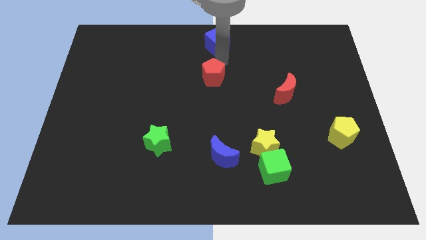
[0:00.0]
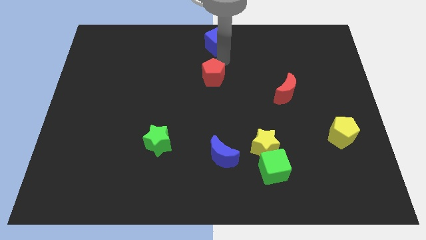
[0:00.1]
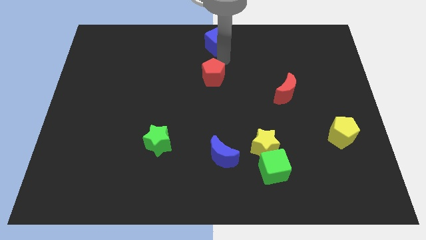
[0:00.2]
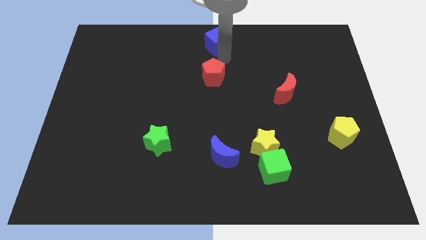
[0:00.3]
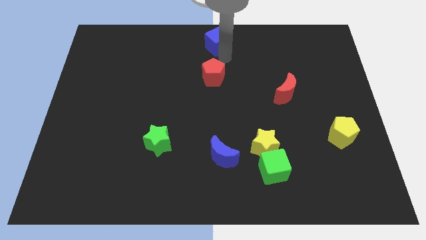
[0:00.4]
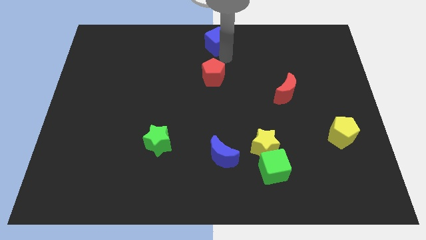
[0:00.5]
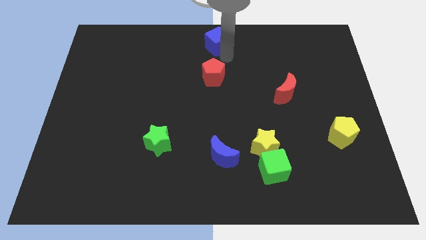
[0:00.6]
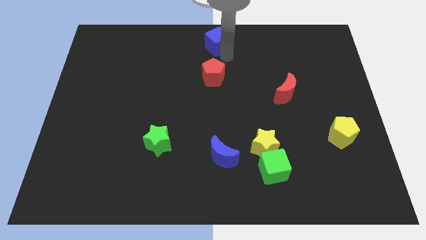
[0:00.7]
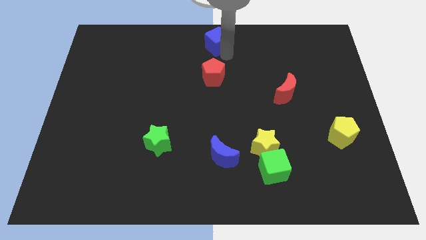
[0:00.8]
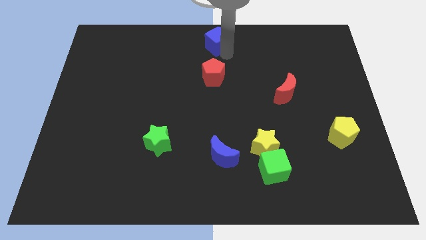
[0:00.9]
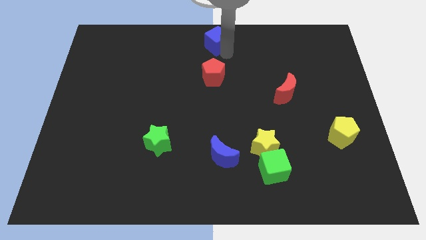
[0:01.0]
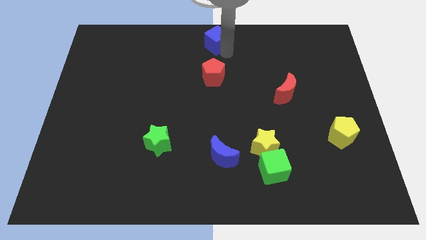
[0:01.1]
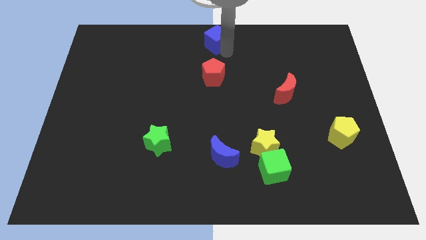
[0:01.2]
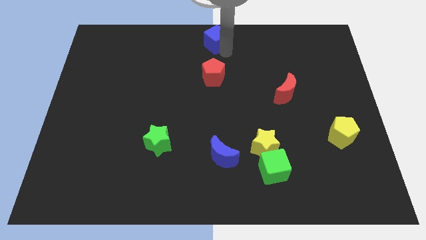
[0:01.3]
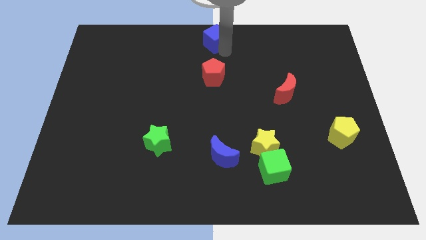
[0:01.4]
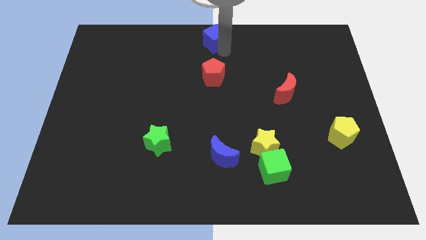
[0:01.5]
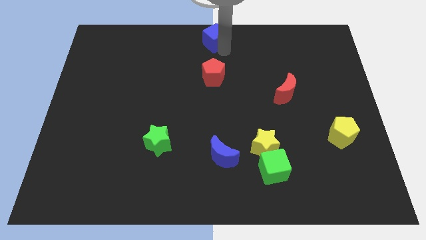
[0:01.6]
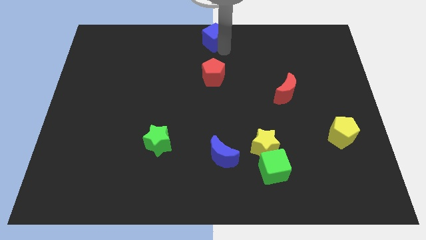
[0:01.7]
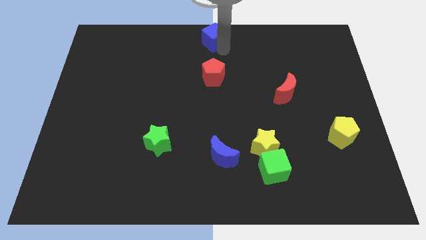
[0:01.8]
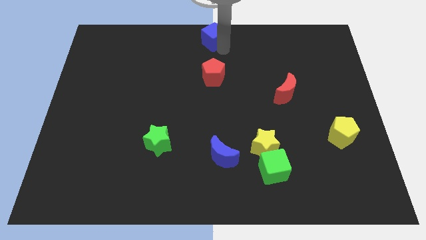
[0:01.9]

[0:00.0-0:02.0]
place the blue cube at the top center of the board

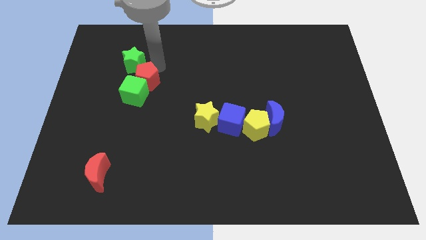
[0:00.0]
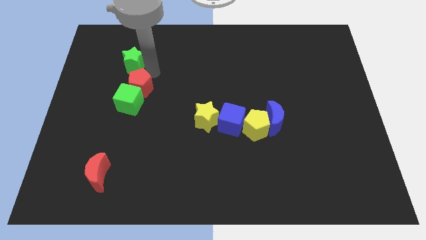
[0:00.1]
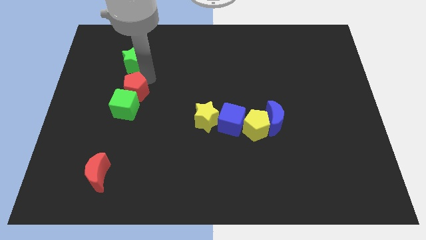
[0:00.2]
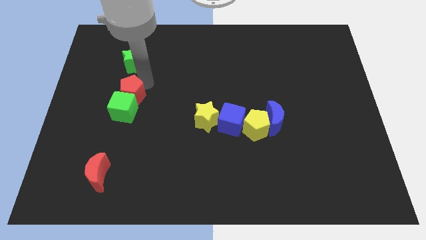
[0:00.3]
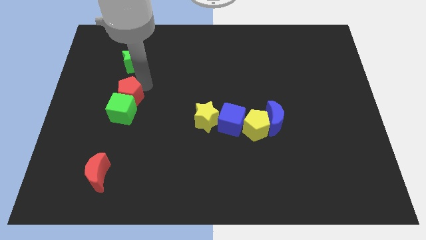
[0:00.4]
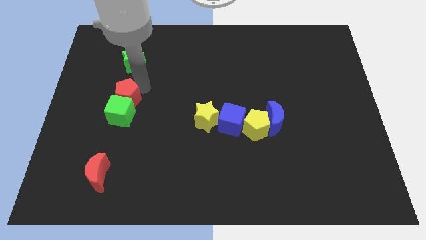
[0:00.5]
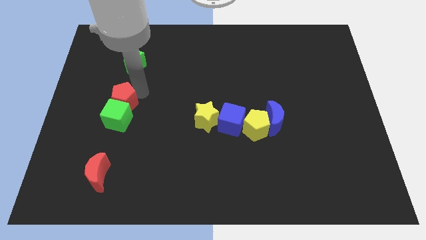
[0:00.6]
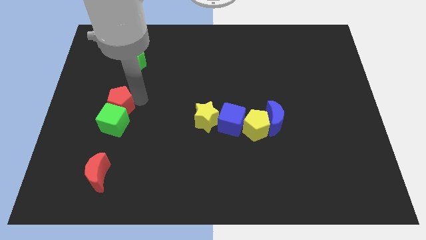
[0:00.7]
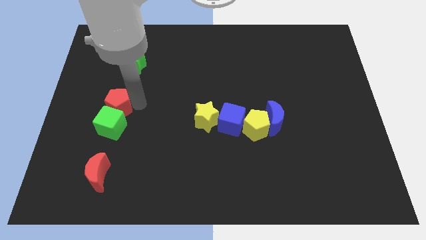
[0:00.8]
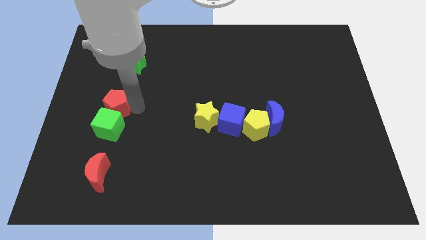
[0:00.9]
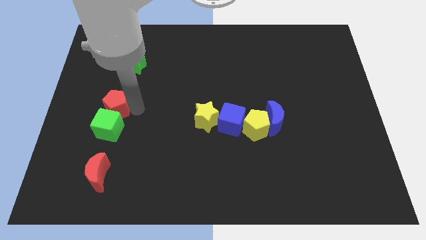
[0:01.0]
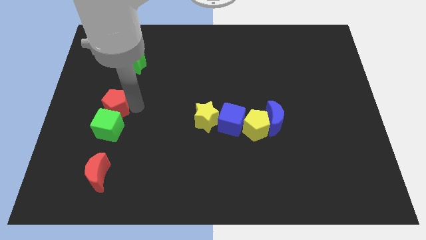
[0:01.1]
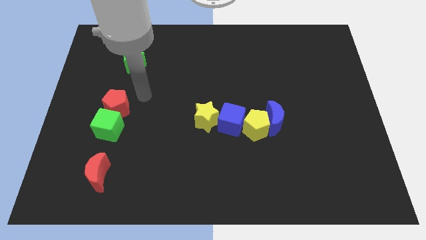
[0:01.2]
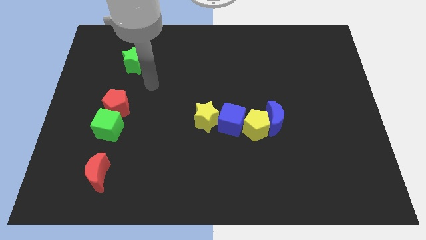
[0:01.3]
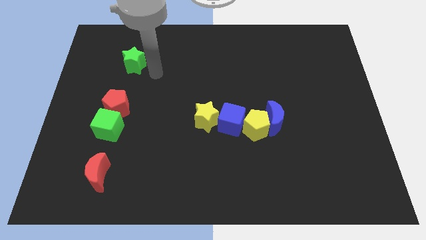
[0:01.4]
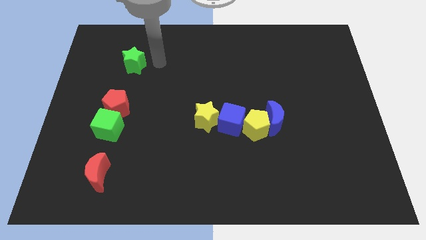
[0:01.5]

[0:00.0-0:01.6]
push the red pentagon along with the green cube to the top of red crescent

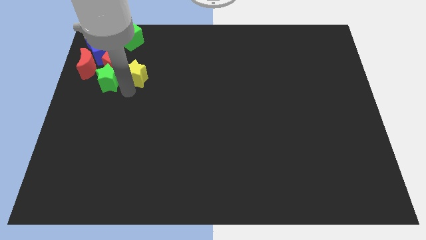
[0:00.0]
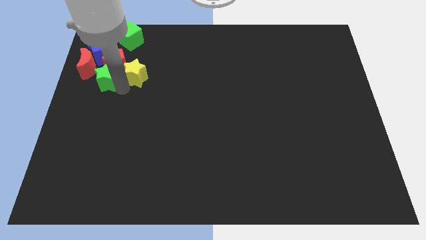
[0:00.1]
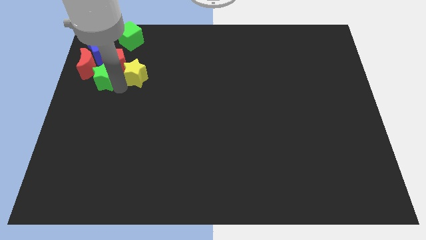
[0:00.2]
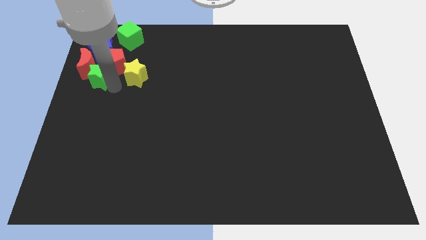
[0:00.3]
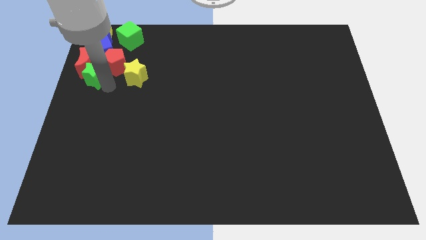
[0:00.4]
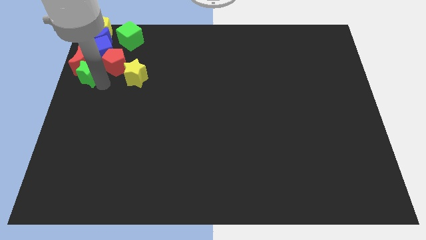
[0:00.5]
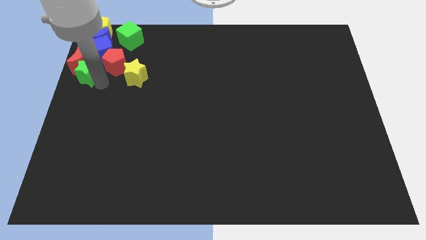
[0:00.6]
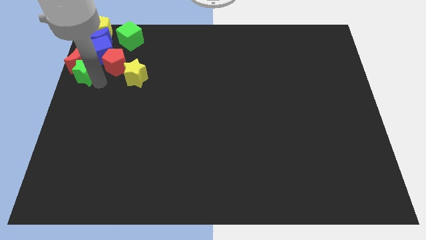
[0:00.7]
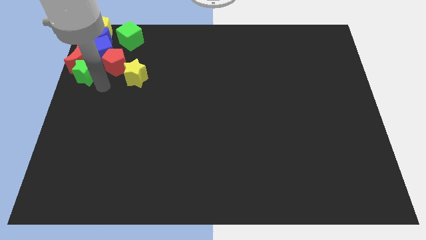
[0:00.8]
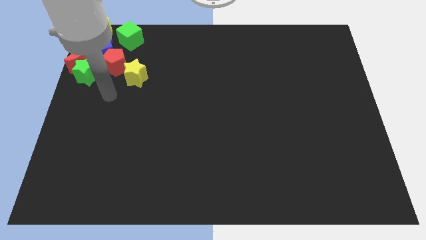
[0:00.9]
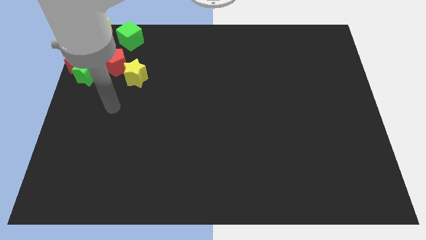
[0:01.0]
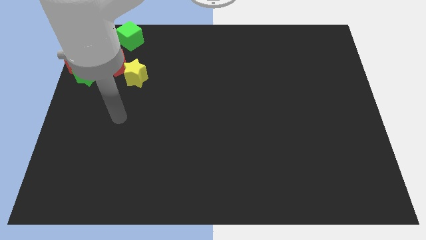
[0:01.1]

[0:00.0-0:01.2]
push the green star into the red crescent

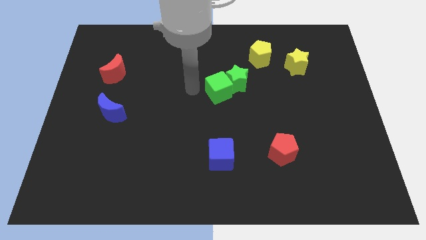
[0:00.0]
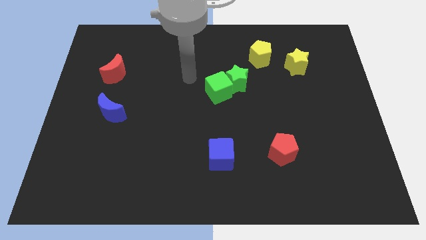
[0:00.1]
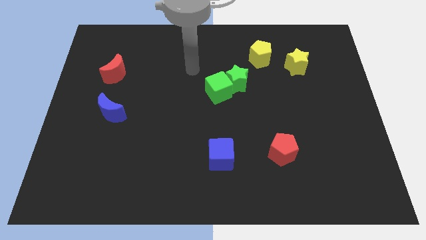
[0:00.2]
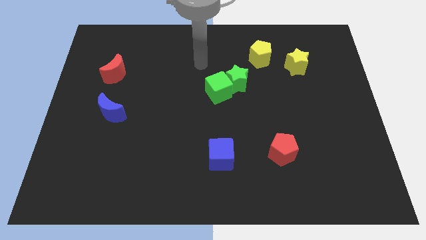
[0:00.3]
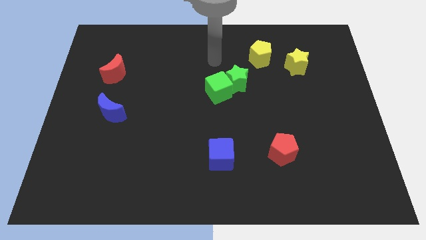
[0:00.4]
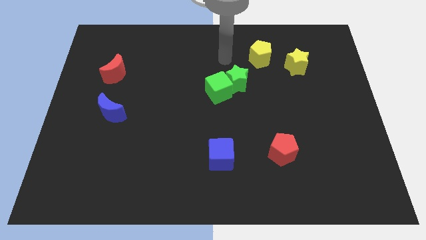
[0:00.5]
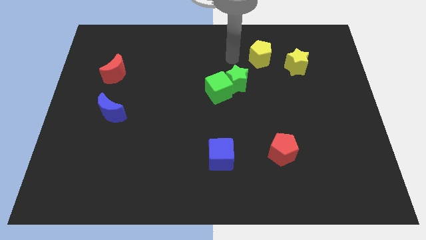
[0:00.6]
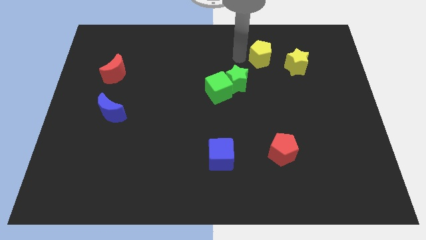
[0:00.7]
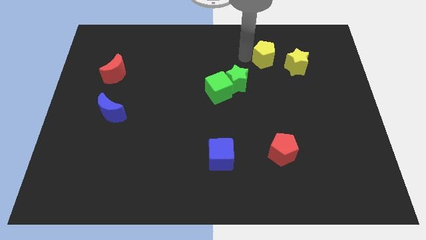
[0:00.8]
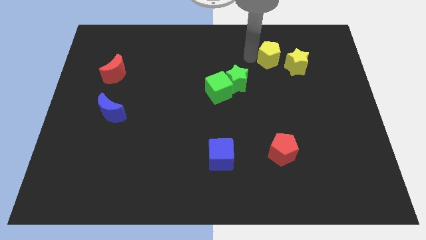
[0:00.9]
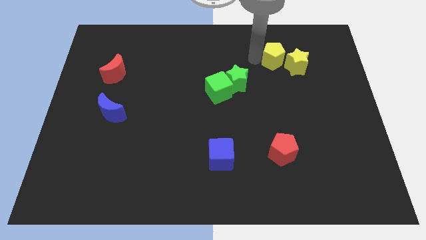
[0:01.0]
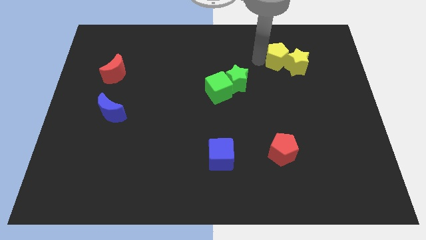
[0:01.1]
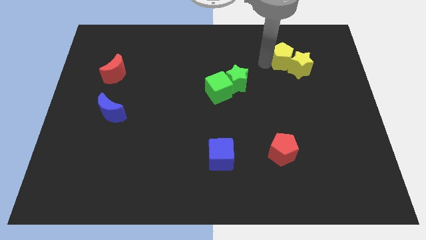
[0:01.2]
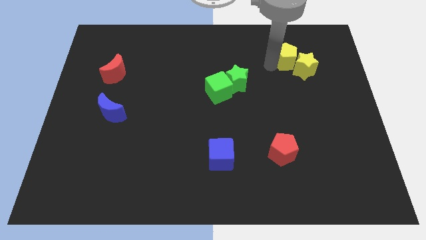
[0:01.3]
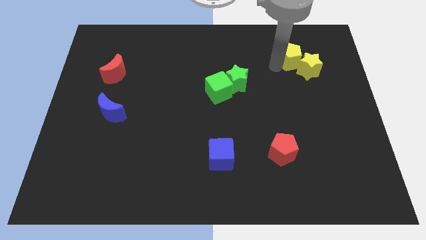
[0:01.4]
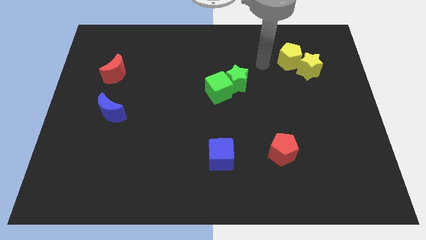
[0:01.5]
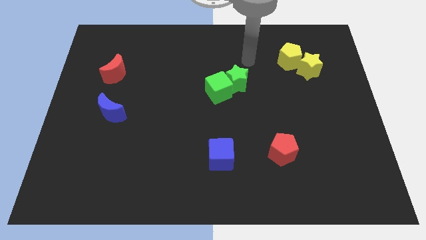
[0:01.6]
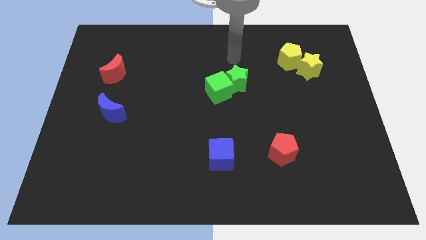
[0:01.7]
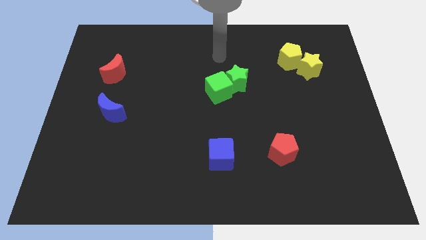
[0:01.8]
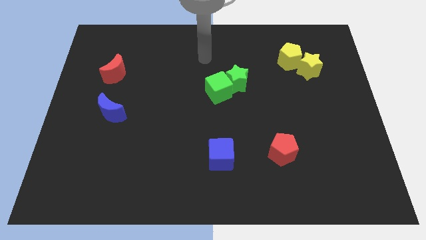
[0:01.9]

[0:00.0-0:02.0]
push the yellow blocks towards right

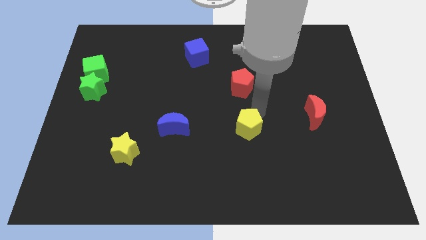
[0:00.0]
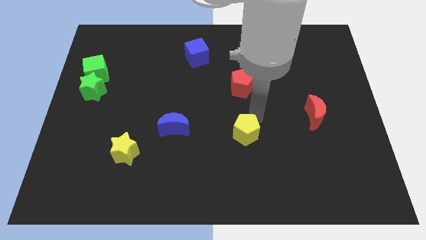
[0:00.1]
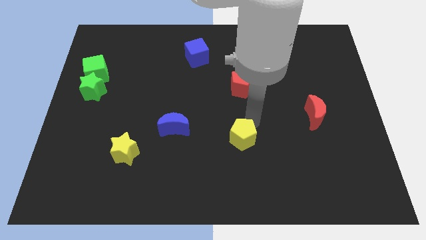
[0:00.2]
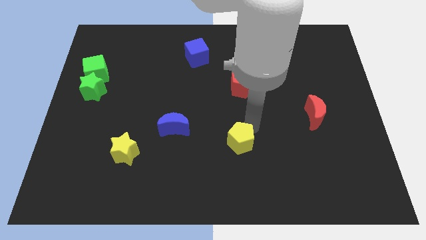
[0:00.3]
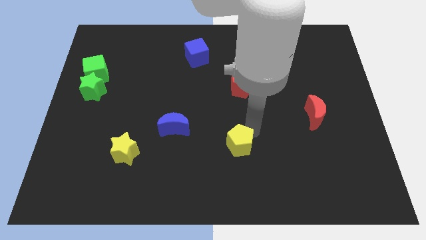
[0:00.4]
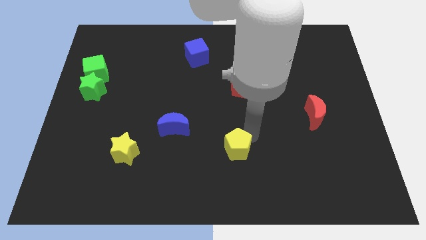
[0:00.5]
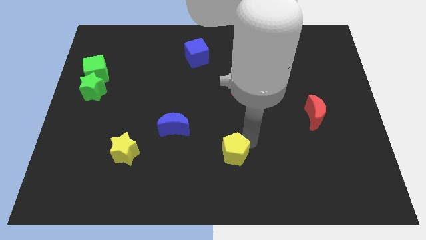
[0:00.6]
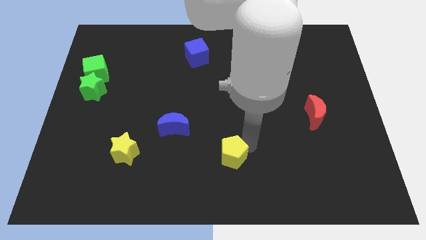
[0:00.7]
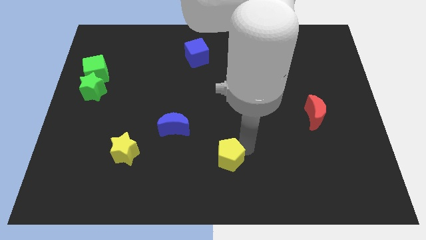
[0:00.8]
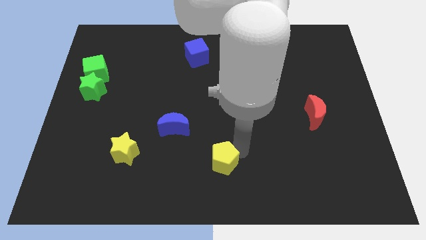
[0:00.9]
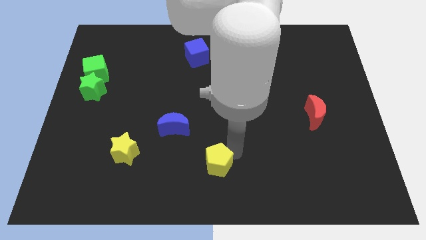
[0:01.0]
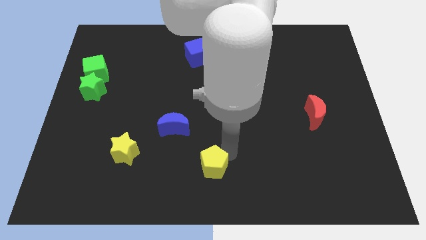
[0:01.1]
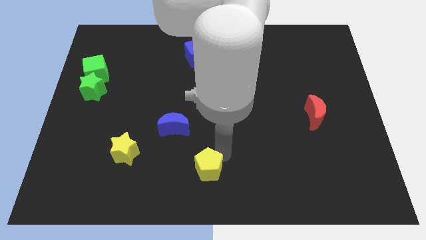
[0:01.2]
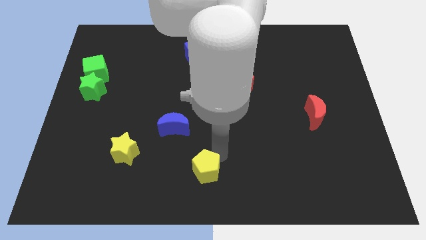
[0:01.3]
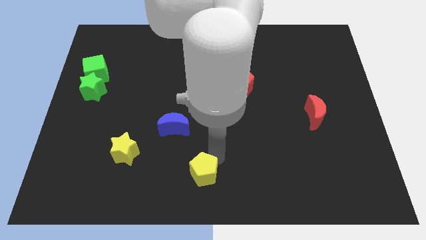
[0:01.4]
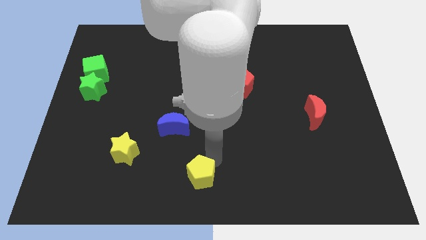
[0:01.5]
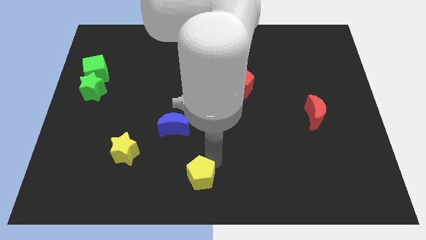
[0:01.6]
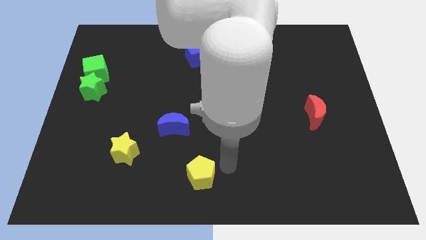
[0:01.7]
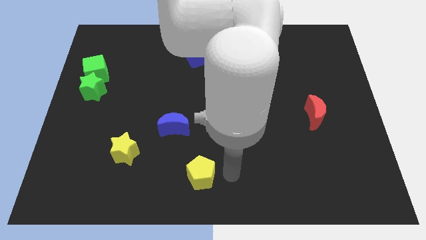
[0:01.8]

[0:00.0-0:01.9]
move yellow pentagon slightly towards the bottom center of the board

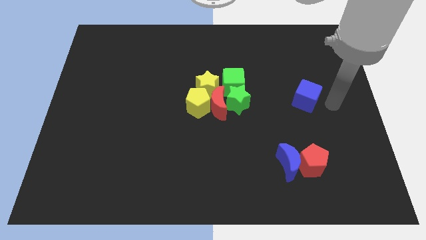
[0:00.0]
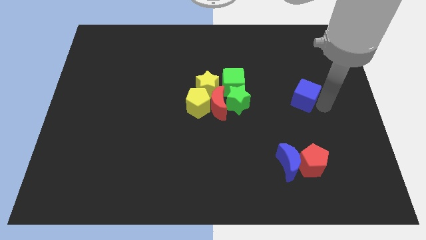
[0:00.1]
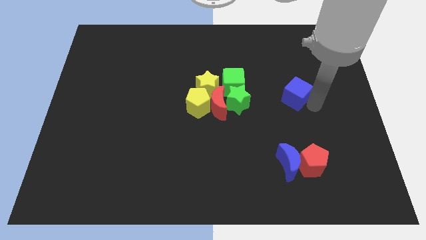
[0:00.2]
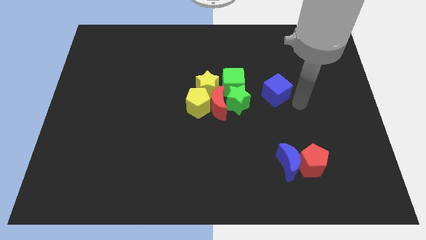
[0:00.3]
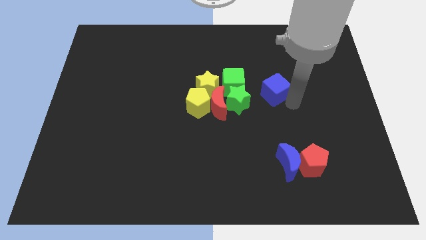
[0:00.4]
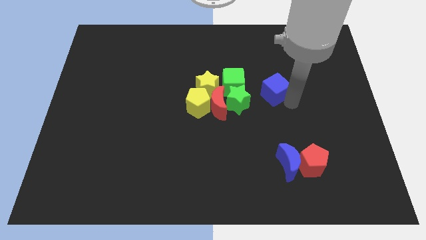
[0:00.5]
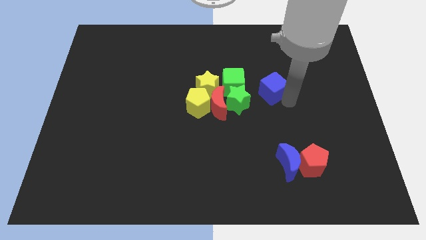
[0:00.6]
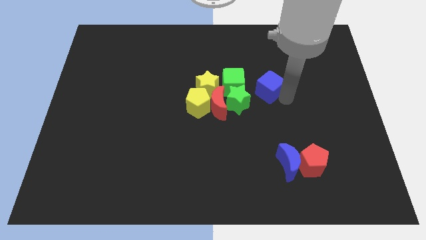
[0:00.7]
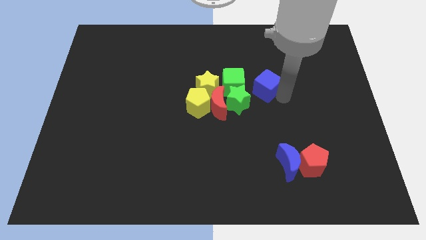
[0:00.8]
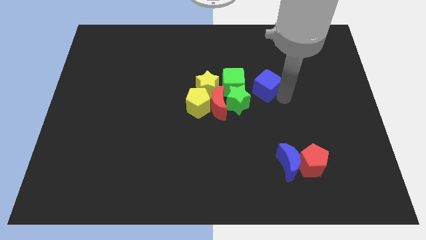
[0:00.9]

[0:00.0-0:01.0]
push the blue cube towards the green blocks
